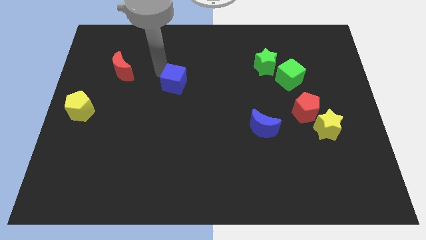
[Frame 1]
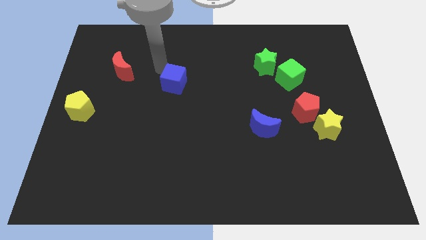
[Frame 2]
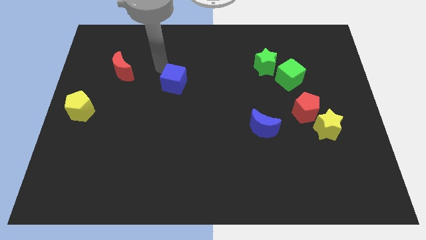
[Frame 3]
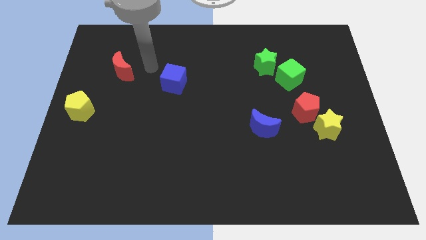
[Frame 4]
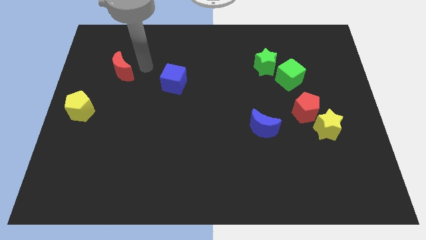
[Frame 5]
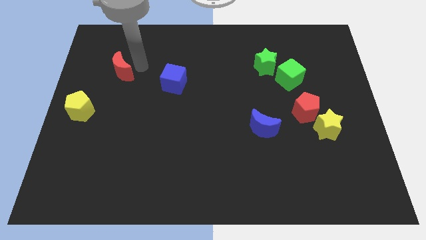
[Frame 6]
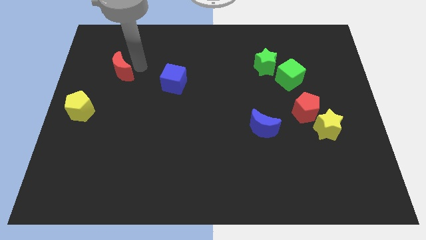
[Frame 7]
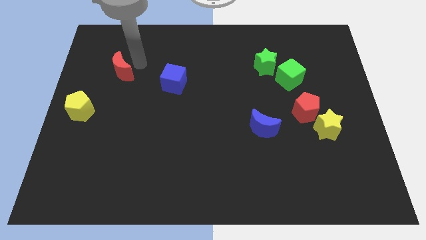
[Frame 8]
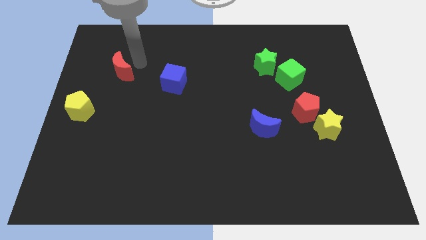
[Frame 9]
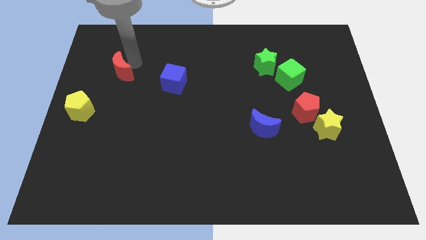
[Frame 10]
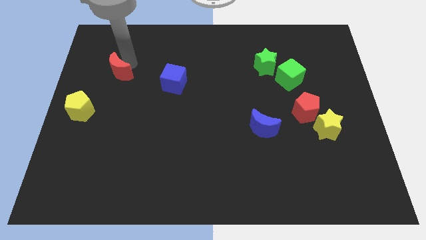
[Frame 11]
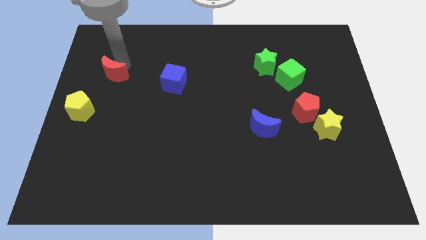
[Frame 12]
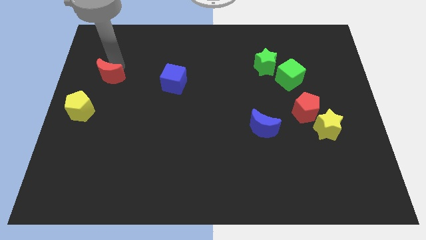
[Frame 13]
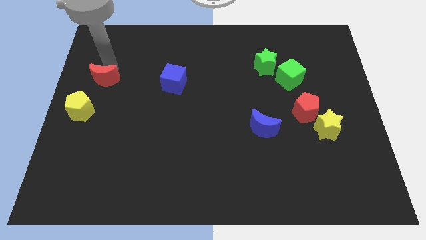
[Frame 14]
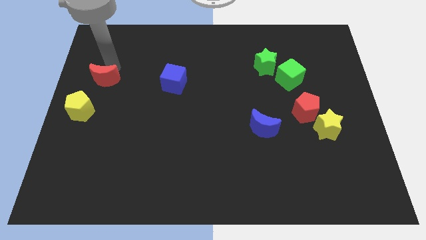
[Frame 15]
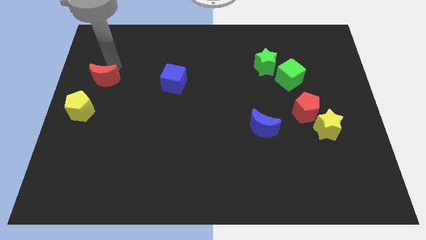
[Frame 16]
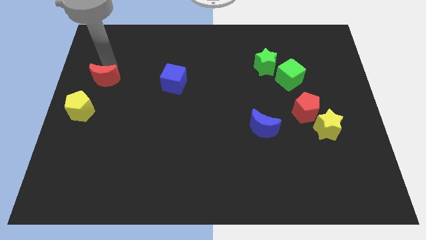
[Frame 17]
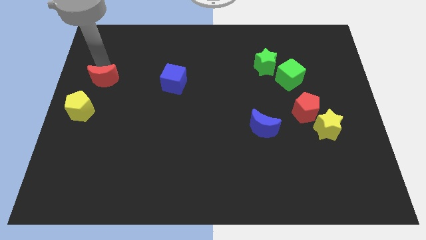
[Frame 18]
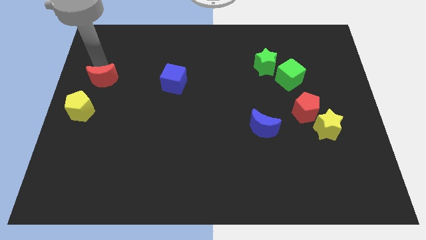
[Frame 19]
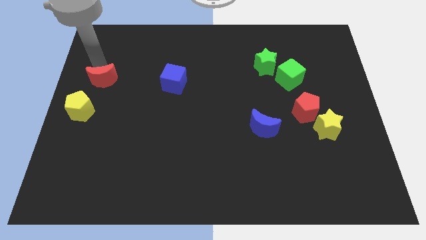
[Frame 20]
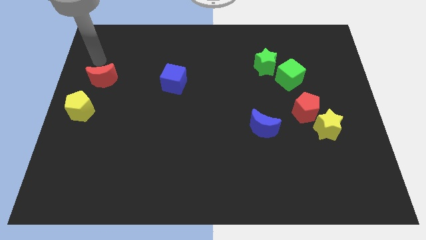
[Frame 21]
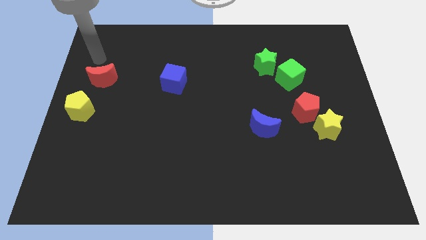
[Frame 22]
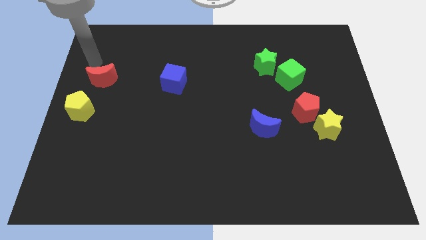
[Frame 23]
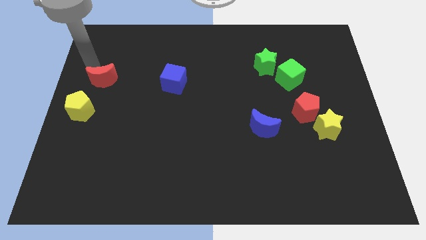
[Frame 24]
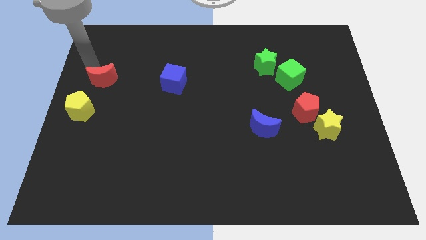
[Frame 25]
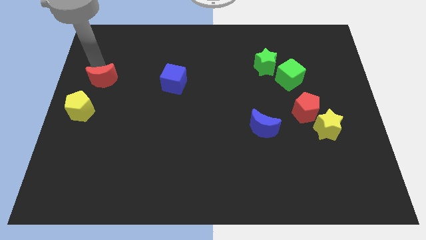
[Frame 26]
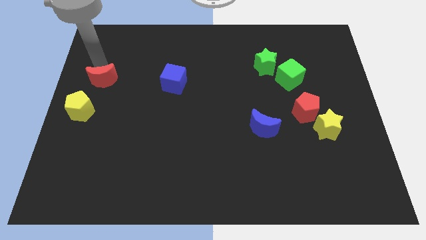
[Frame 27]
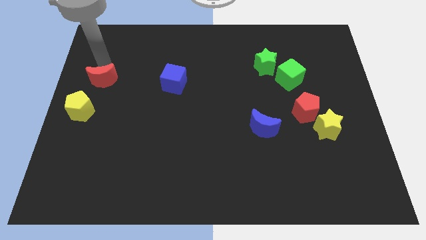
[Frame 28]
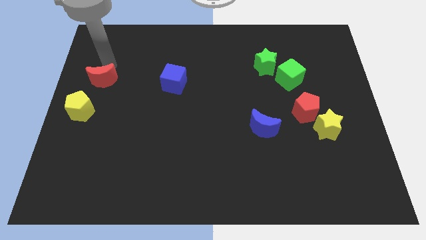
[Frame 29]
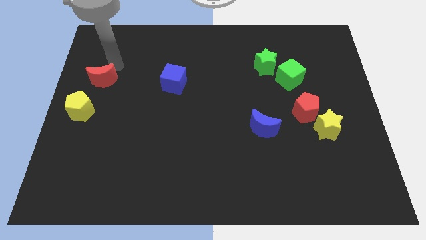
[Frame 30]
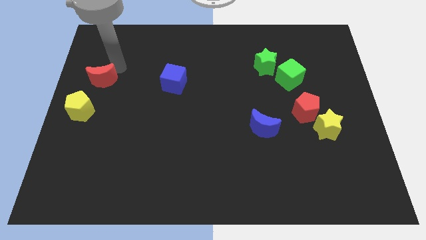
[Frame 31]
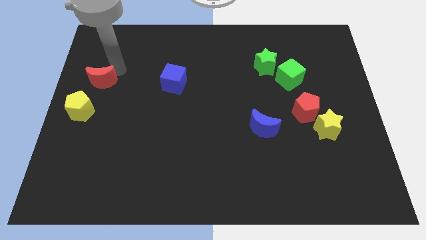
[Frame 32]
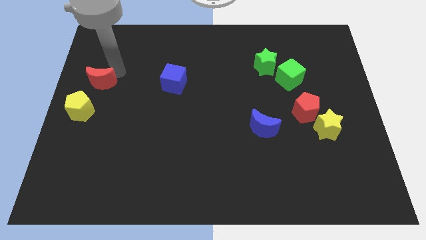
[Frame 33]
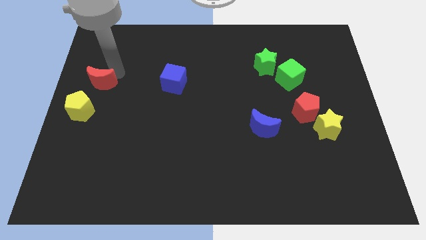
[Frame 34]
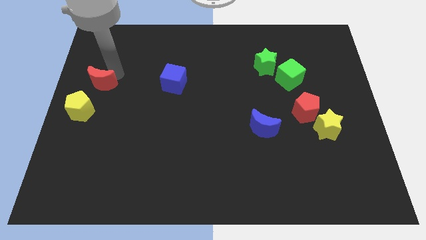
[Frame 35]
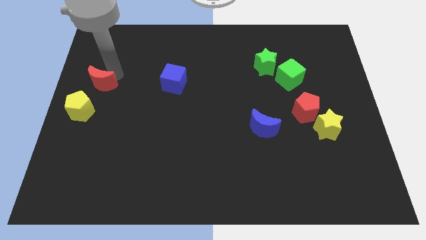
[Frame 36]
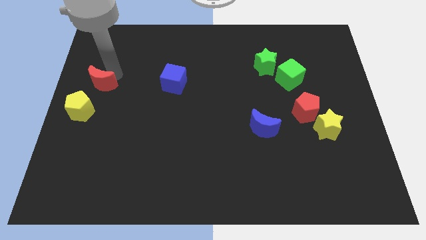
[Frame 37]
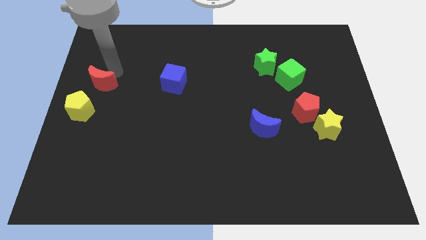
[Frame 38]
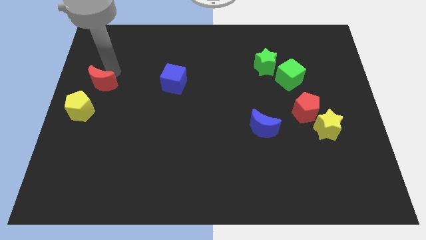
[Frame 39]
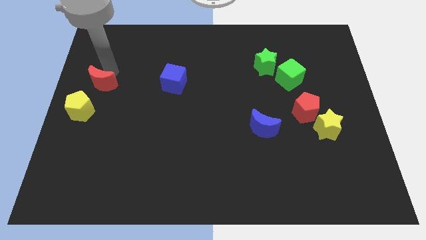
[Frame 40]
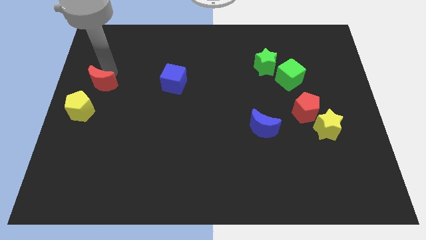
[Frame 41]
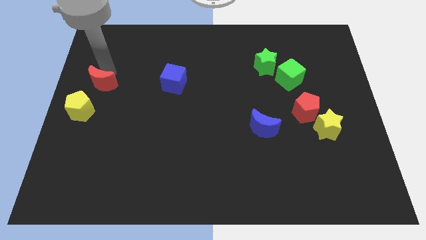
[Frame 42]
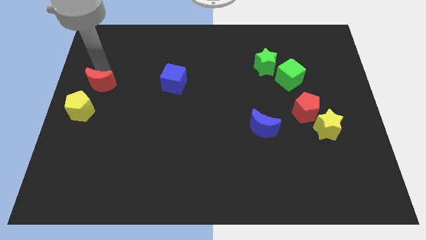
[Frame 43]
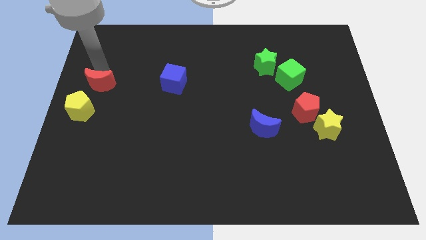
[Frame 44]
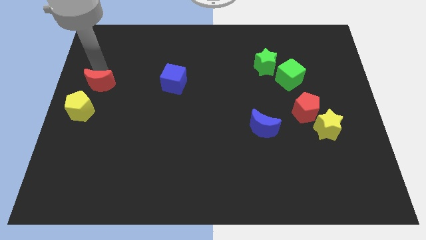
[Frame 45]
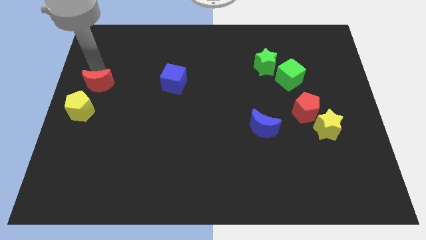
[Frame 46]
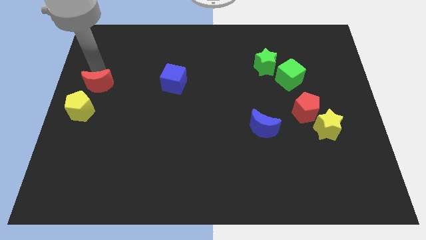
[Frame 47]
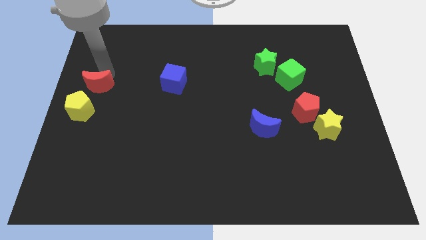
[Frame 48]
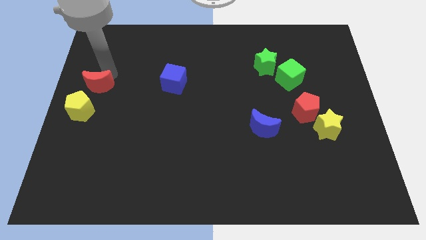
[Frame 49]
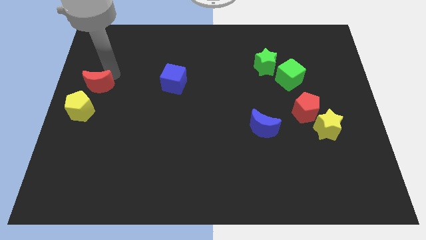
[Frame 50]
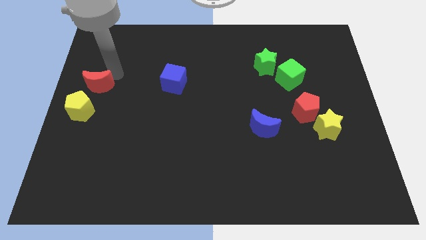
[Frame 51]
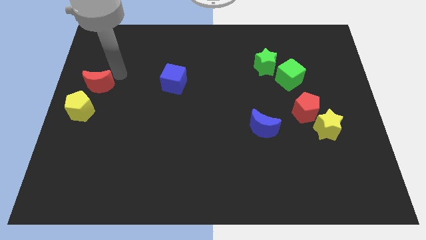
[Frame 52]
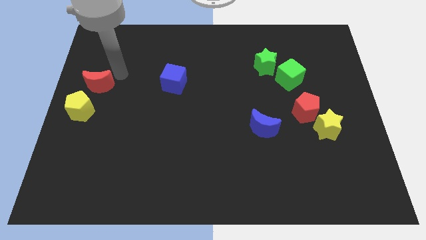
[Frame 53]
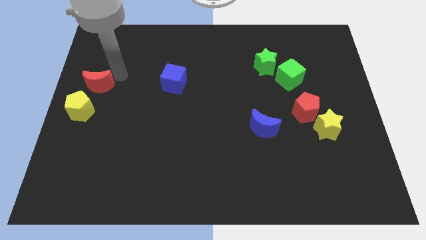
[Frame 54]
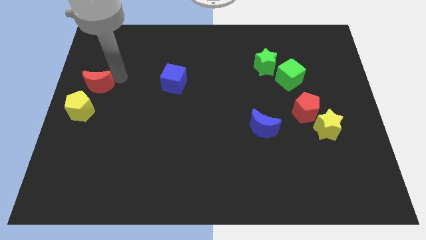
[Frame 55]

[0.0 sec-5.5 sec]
push the red crescent down slightly

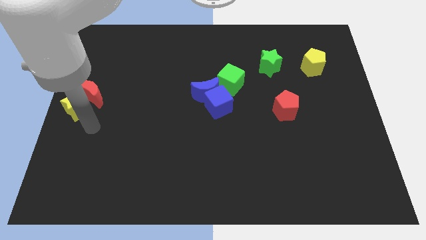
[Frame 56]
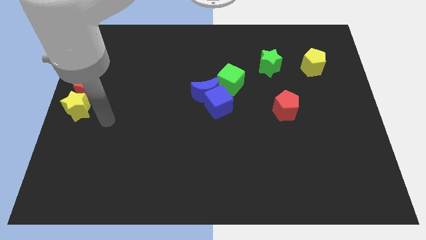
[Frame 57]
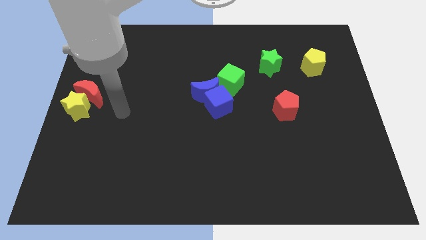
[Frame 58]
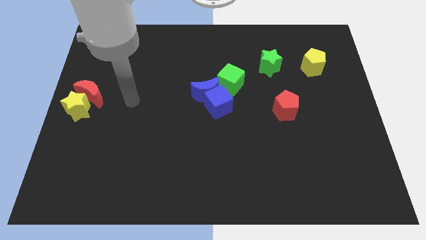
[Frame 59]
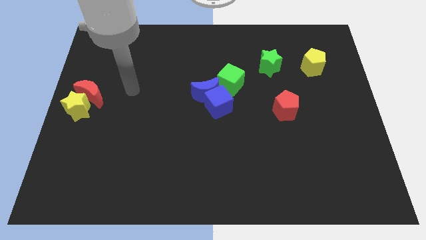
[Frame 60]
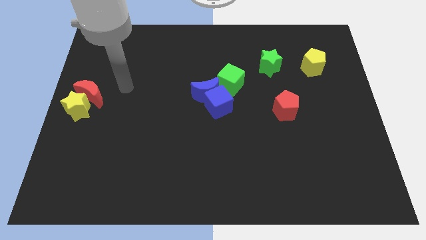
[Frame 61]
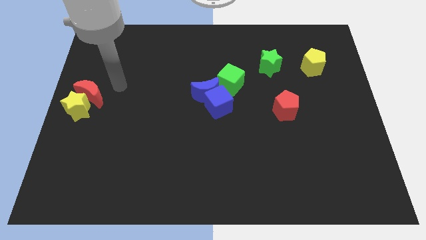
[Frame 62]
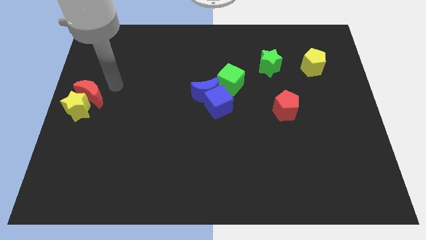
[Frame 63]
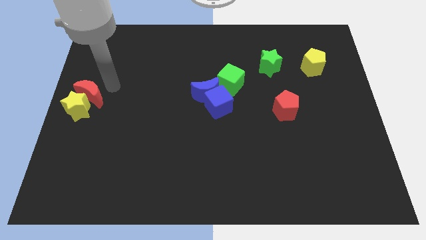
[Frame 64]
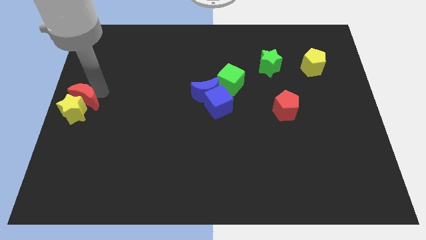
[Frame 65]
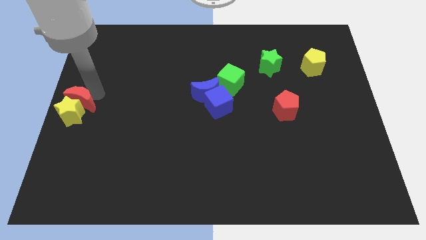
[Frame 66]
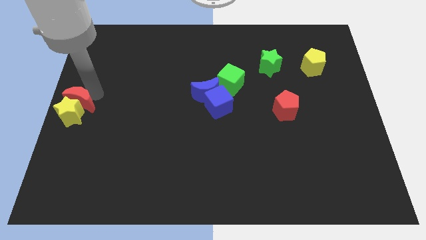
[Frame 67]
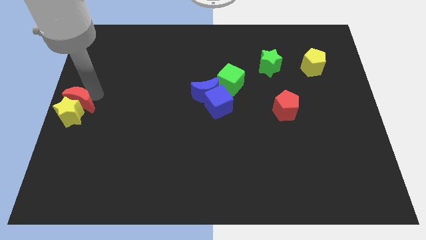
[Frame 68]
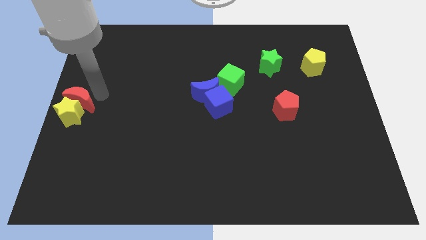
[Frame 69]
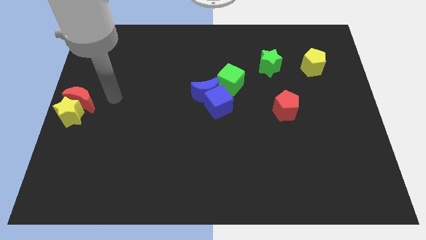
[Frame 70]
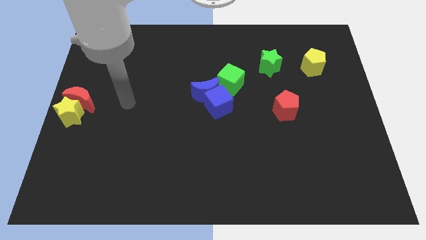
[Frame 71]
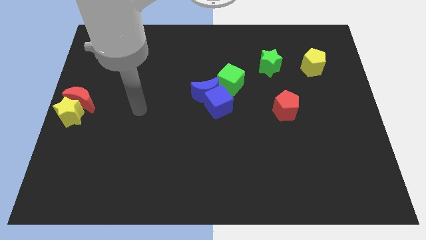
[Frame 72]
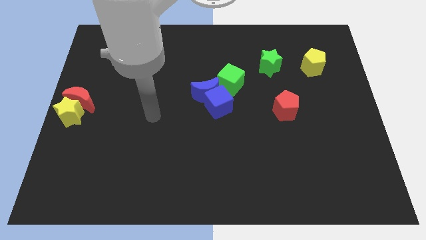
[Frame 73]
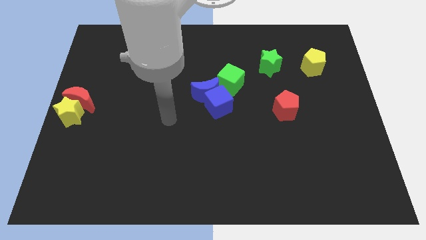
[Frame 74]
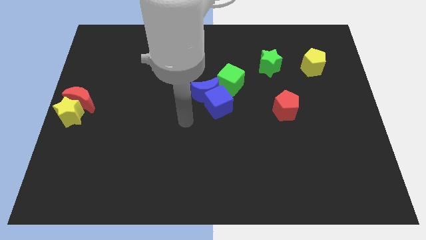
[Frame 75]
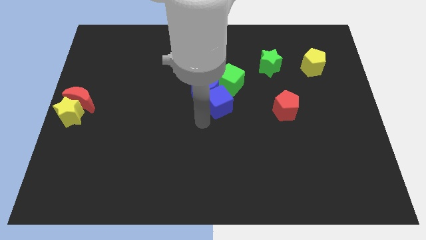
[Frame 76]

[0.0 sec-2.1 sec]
slightly push red crescent along with yellow star to the left center

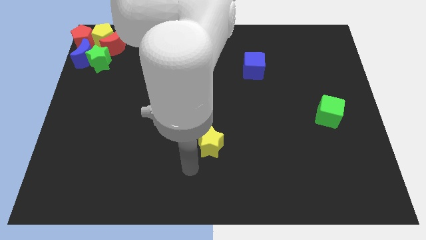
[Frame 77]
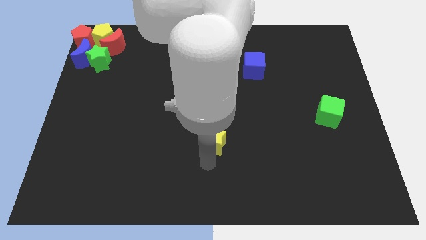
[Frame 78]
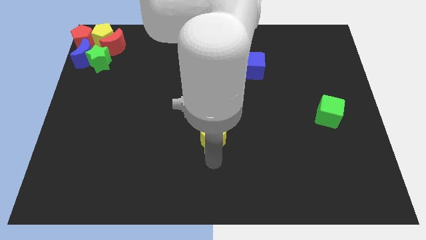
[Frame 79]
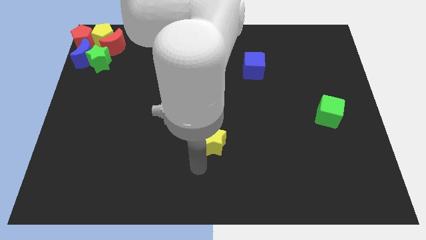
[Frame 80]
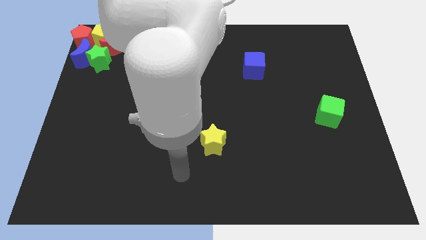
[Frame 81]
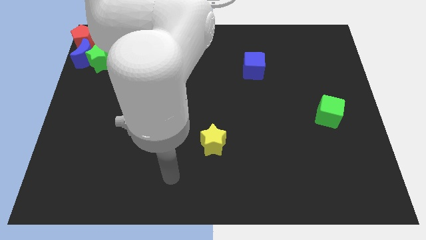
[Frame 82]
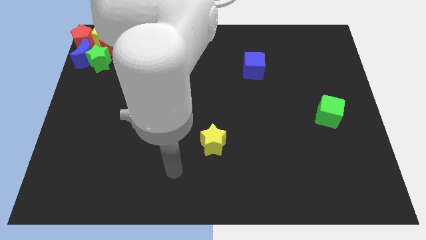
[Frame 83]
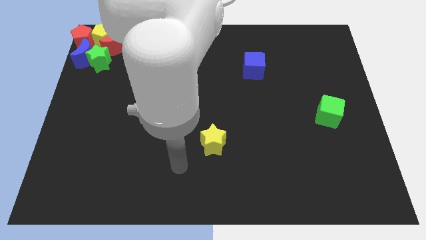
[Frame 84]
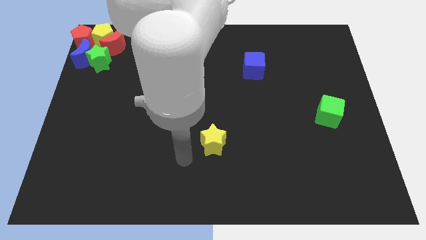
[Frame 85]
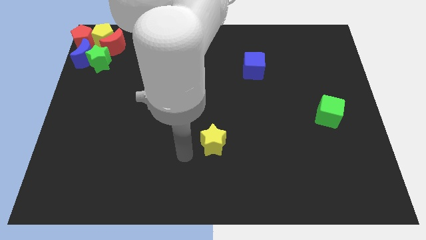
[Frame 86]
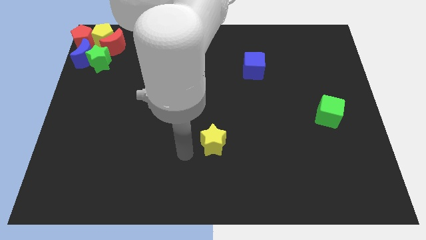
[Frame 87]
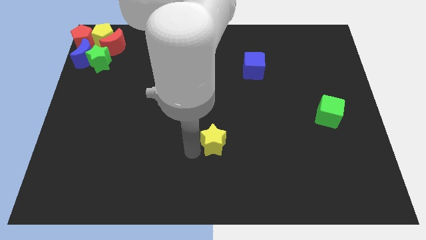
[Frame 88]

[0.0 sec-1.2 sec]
touch the yellow star

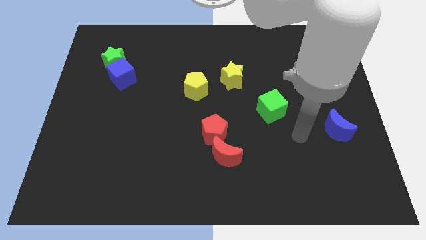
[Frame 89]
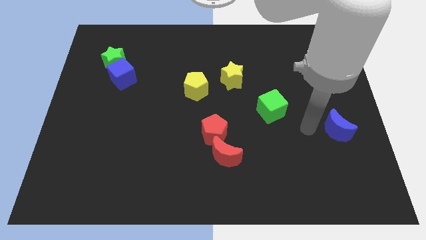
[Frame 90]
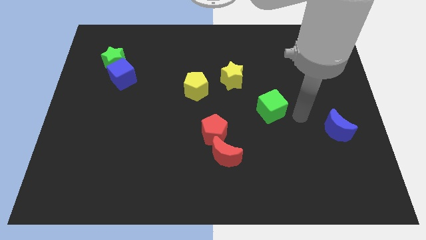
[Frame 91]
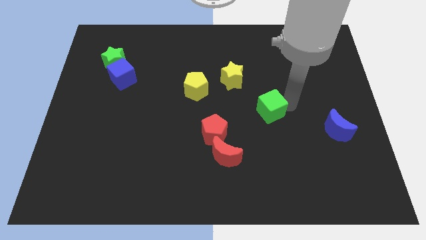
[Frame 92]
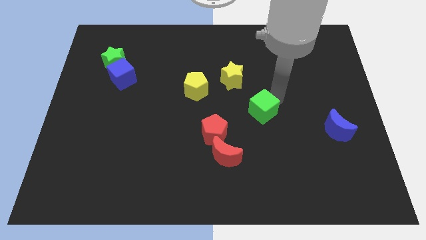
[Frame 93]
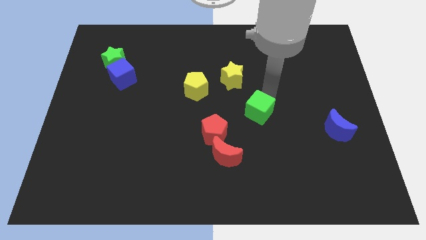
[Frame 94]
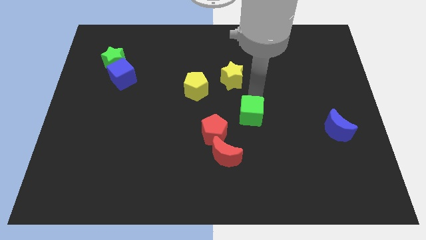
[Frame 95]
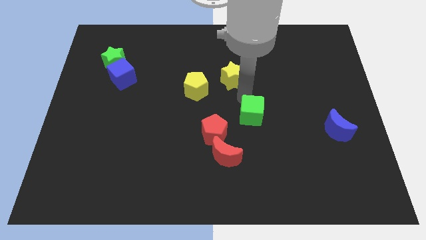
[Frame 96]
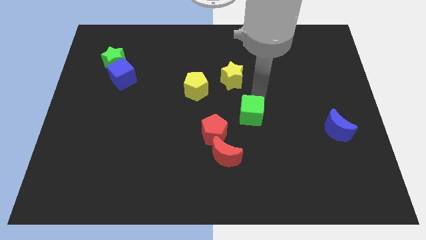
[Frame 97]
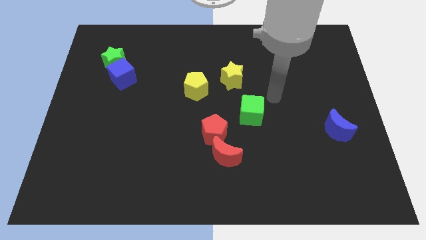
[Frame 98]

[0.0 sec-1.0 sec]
place green cube right diagonally to the yellow star
